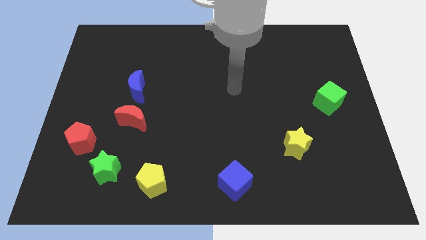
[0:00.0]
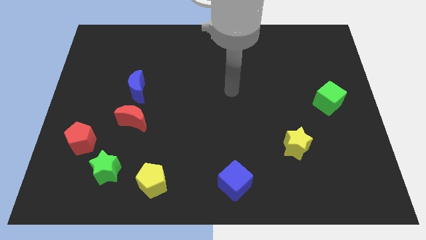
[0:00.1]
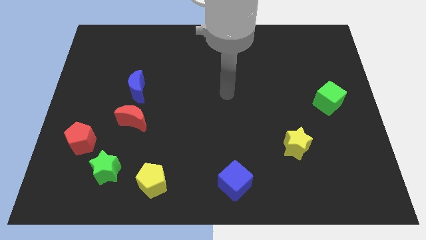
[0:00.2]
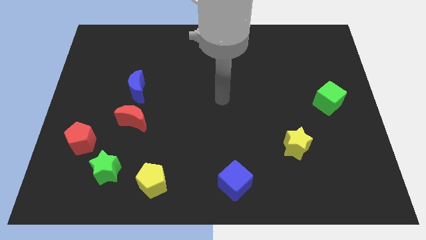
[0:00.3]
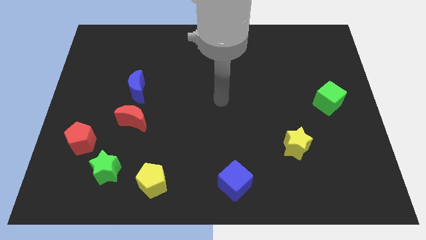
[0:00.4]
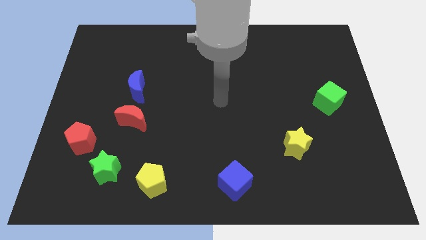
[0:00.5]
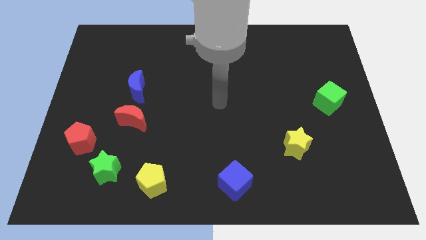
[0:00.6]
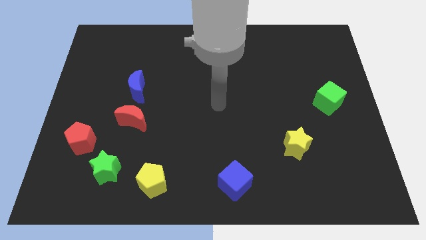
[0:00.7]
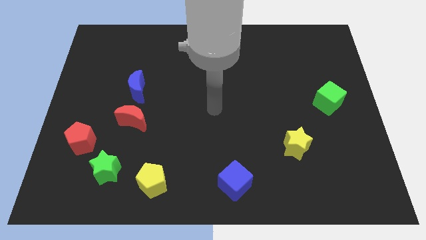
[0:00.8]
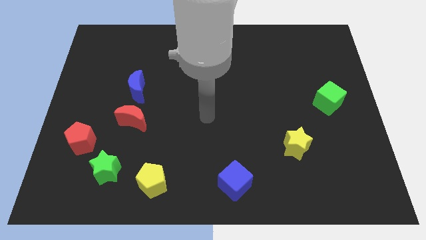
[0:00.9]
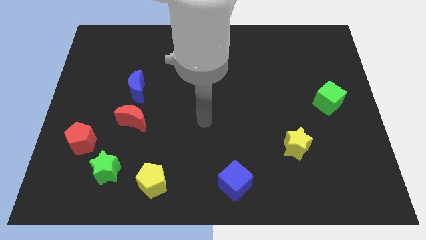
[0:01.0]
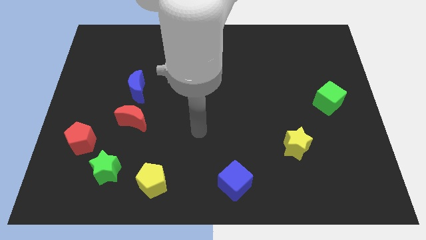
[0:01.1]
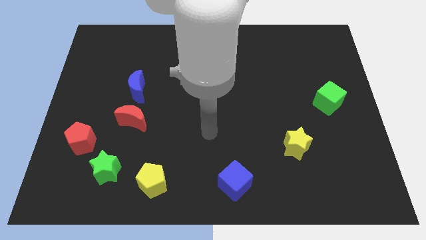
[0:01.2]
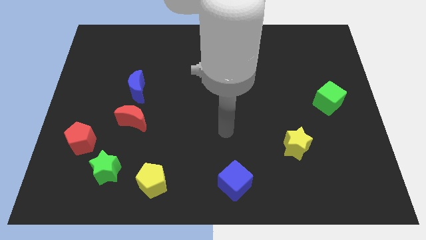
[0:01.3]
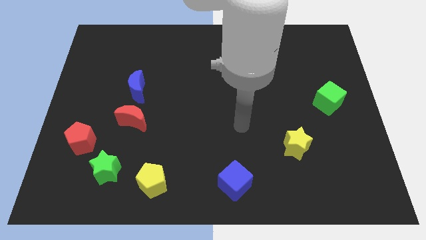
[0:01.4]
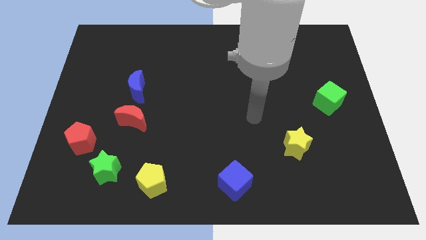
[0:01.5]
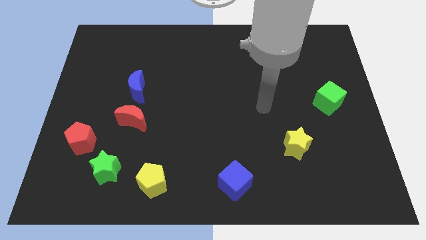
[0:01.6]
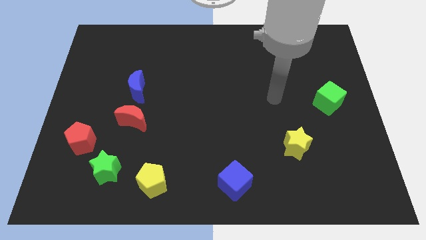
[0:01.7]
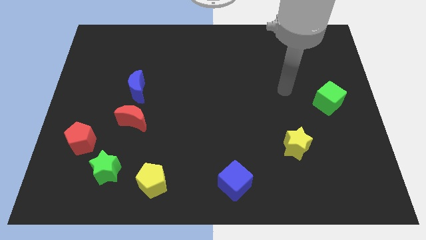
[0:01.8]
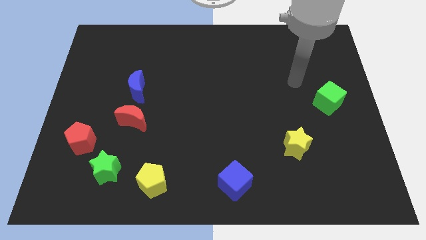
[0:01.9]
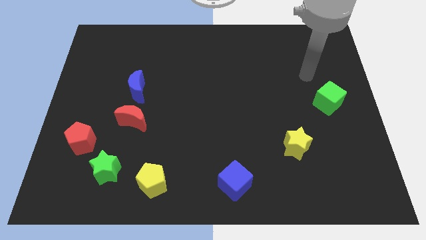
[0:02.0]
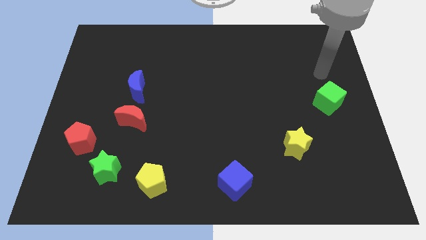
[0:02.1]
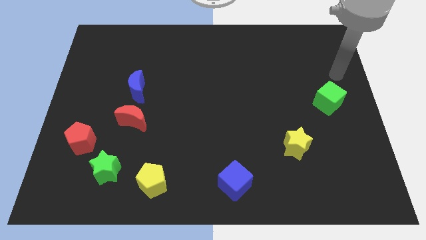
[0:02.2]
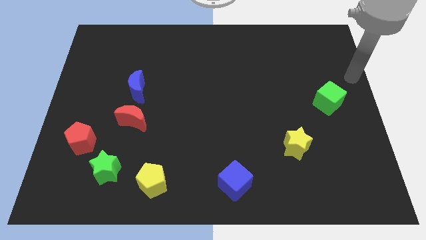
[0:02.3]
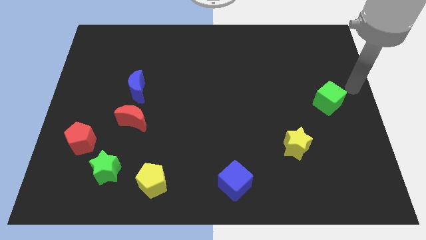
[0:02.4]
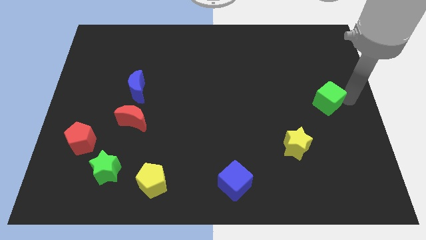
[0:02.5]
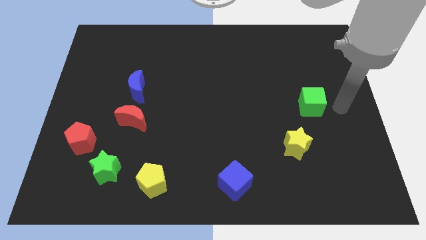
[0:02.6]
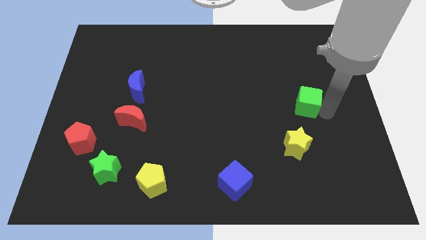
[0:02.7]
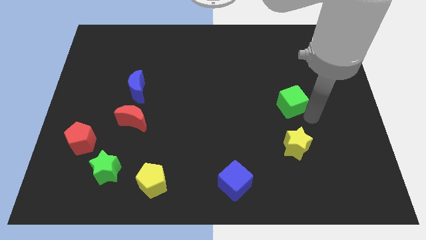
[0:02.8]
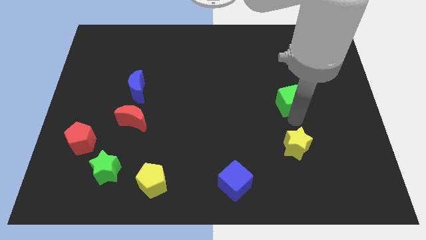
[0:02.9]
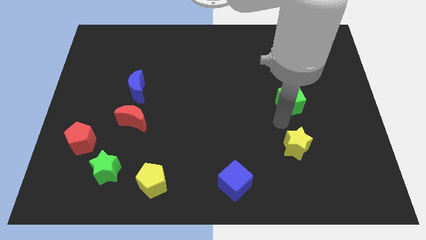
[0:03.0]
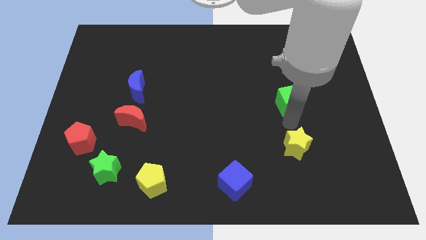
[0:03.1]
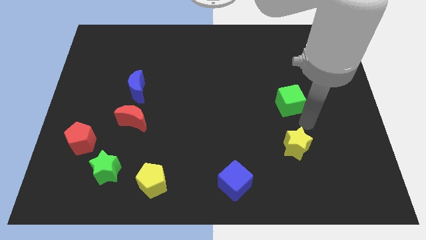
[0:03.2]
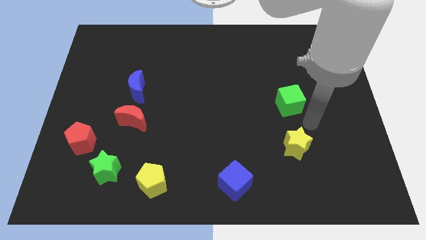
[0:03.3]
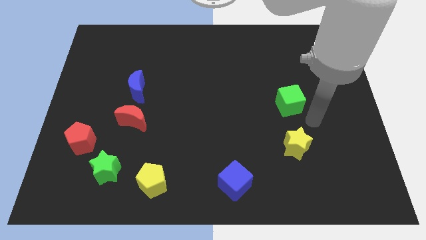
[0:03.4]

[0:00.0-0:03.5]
place green cube to the top of yellow star

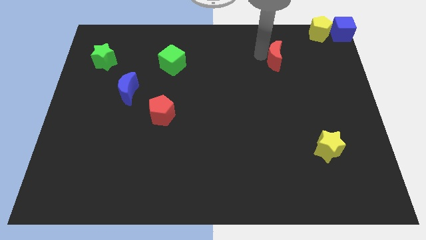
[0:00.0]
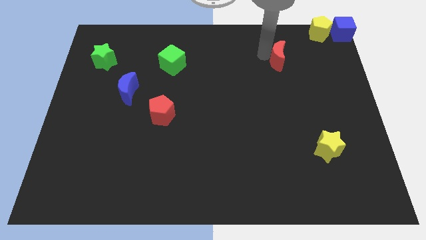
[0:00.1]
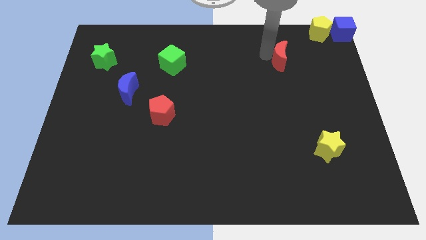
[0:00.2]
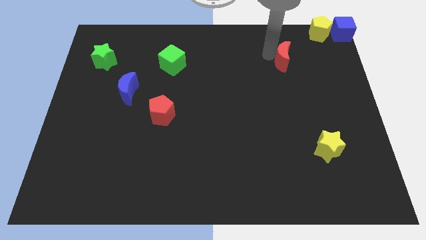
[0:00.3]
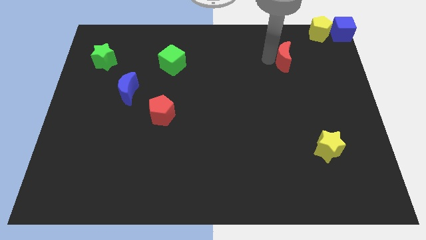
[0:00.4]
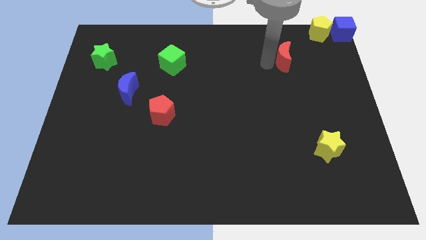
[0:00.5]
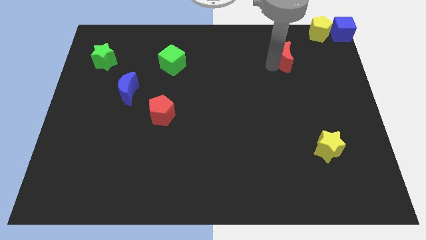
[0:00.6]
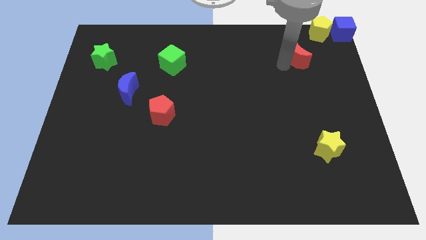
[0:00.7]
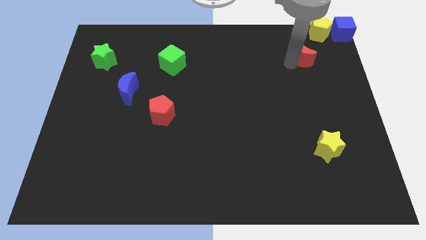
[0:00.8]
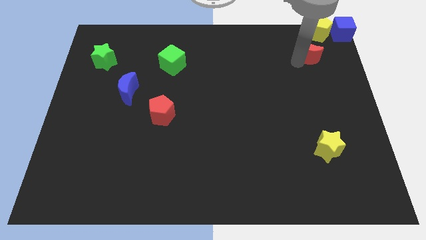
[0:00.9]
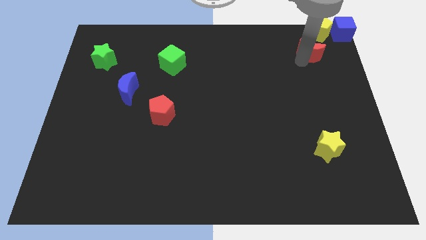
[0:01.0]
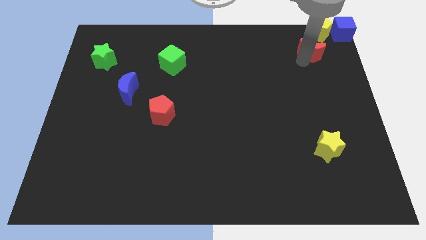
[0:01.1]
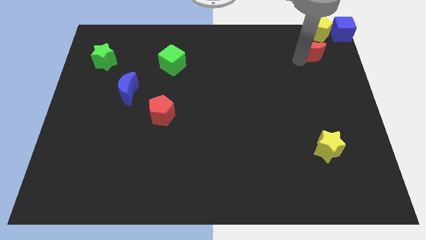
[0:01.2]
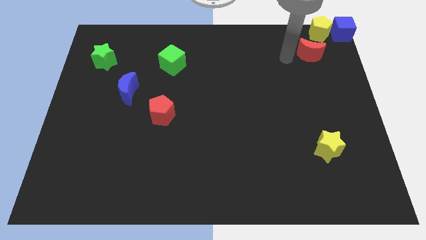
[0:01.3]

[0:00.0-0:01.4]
push the red crescent towards the yellow pentagon

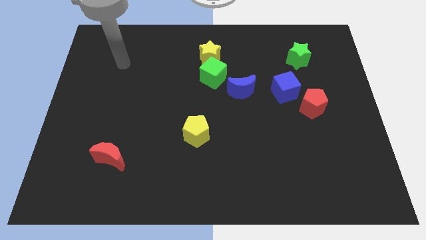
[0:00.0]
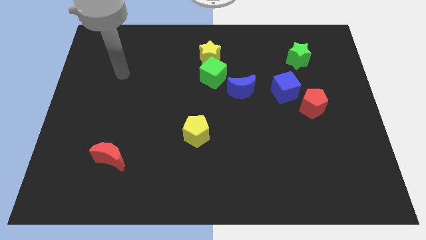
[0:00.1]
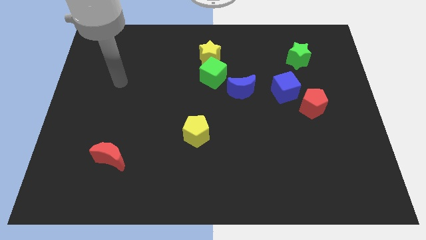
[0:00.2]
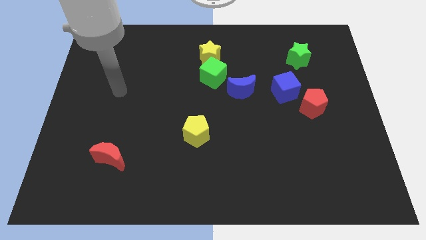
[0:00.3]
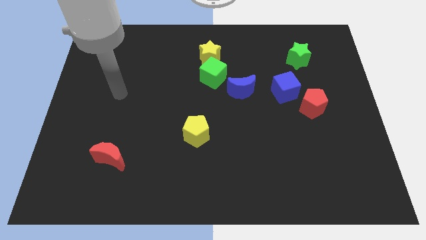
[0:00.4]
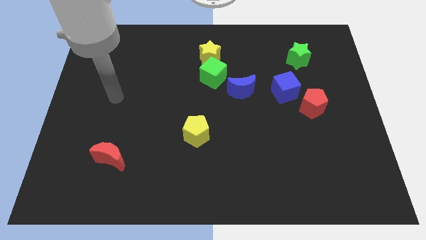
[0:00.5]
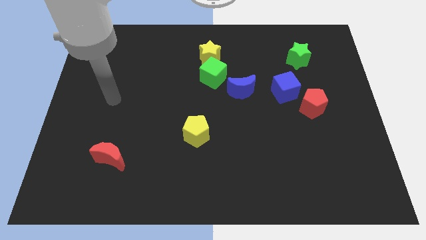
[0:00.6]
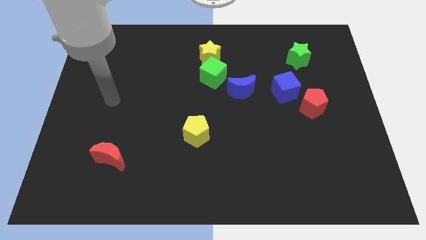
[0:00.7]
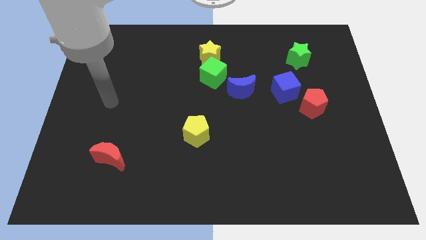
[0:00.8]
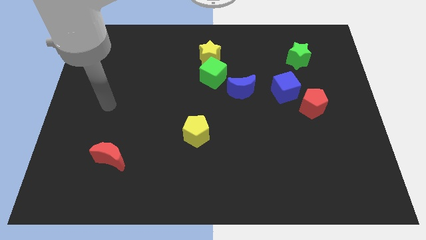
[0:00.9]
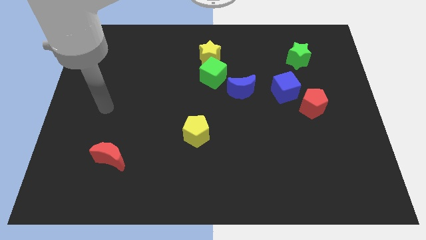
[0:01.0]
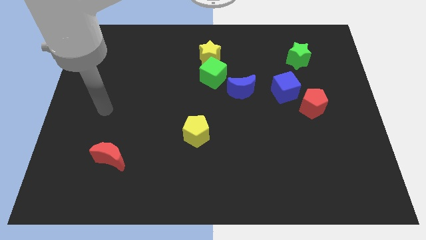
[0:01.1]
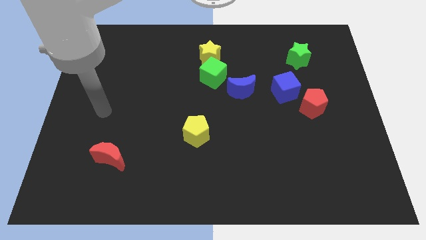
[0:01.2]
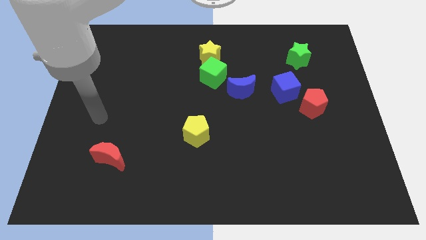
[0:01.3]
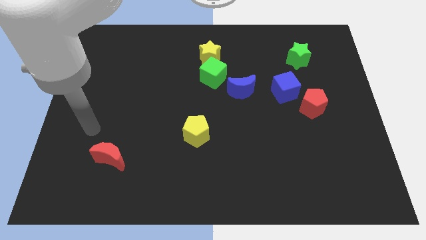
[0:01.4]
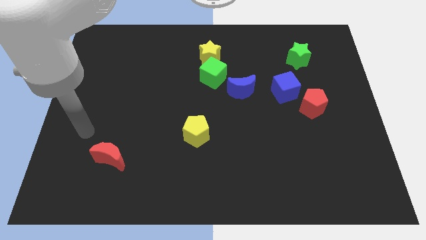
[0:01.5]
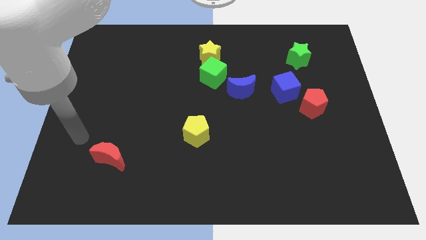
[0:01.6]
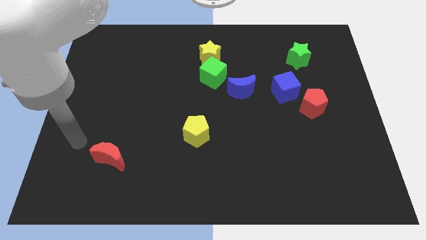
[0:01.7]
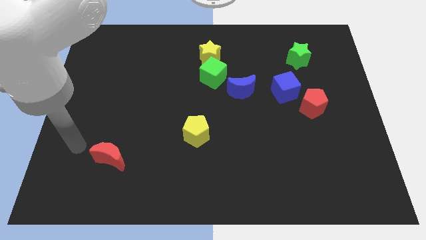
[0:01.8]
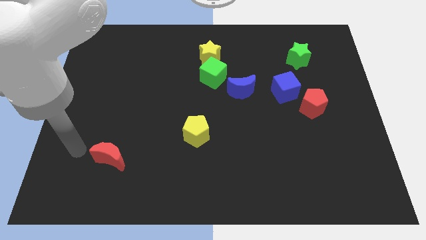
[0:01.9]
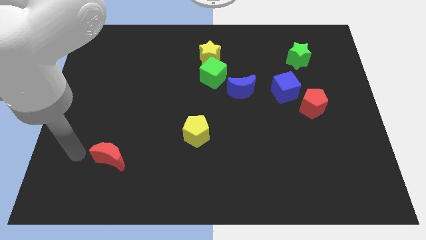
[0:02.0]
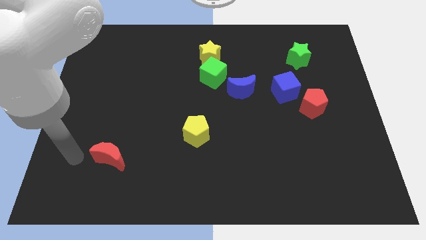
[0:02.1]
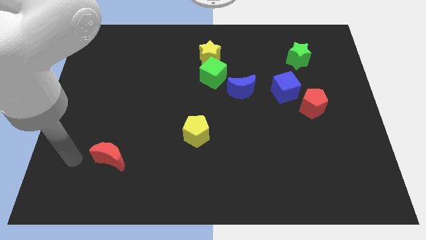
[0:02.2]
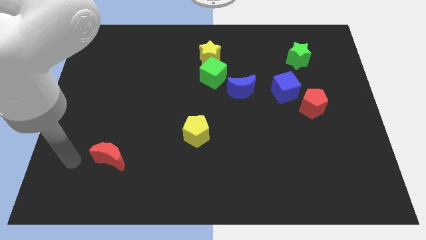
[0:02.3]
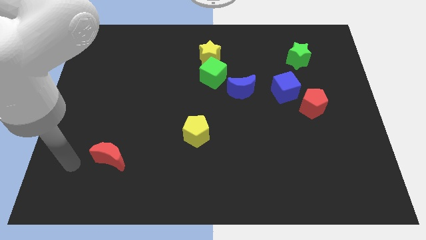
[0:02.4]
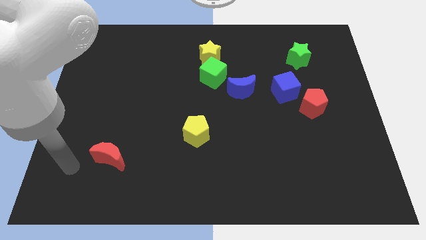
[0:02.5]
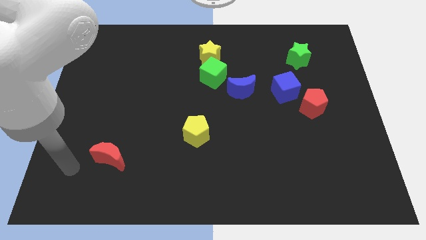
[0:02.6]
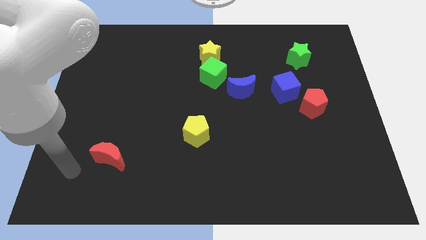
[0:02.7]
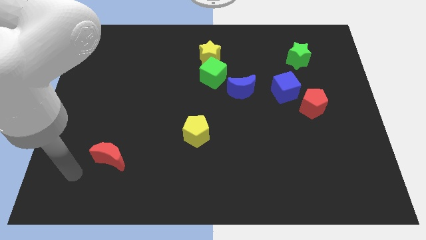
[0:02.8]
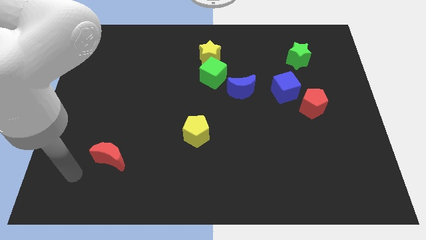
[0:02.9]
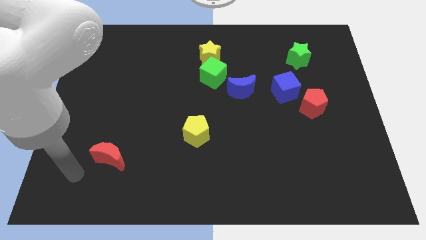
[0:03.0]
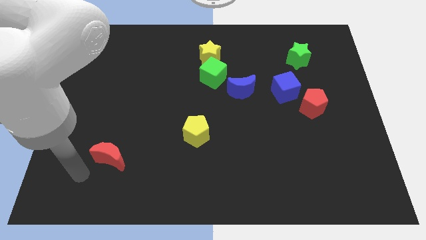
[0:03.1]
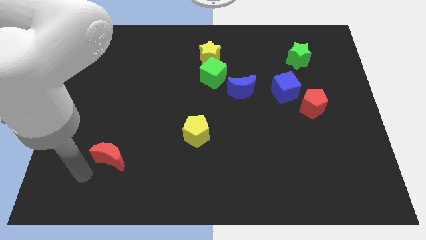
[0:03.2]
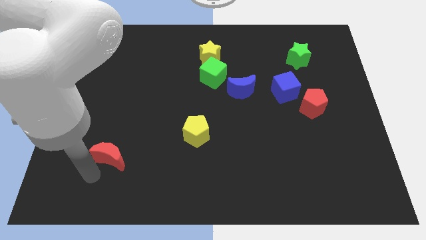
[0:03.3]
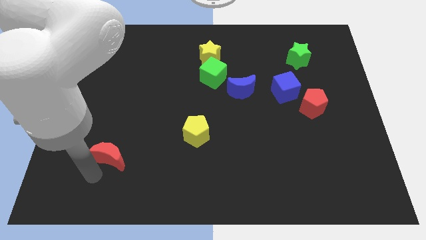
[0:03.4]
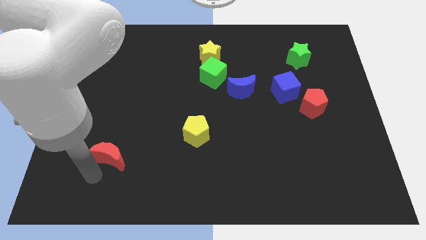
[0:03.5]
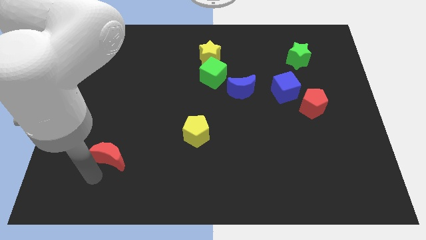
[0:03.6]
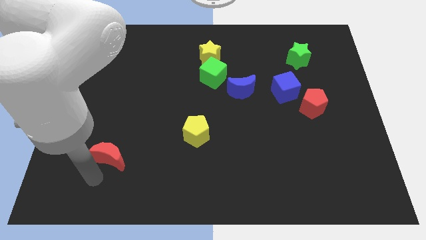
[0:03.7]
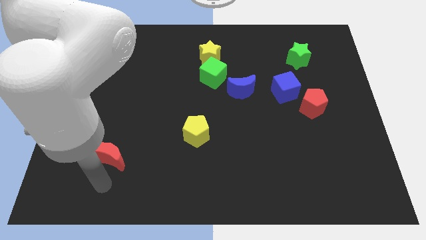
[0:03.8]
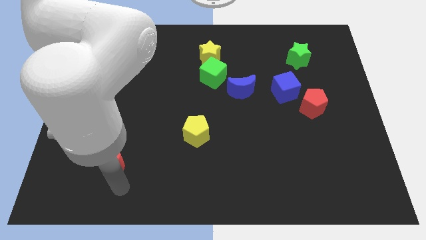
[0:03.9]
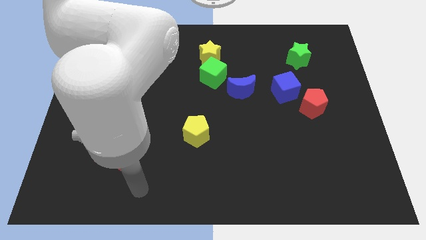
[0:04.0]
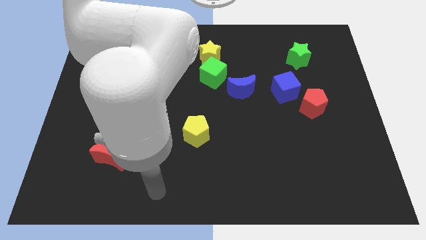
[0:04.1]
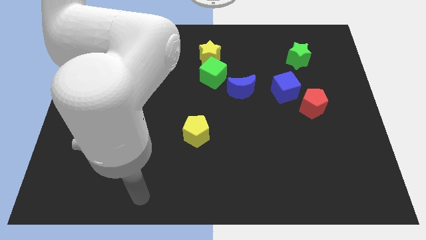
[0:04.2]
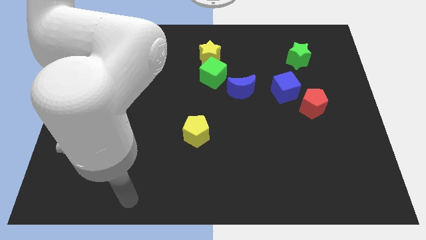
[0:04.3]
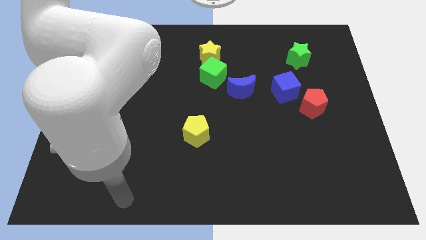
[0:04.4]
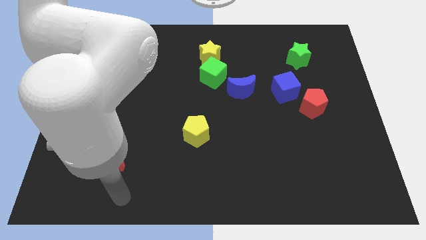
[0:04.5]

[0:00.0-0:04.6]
move your arm towards the bottom of red crescent
